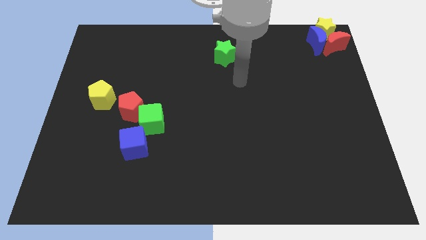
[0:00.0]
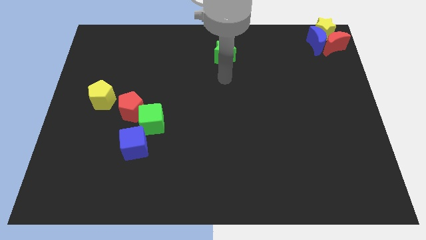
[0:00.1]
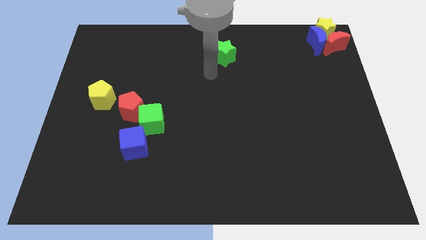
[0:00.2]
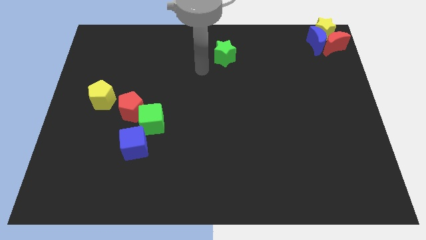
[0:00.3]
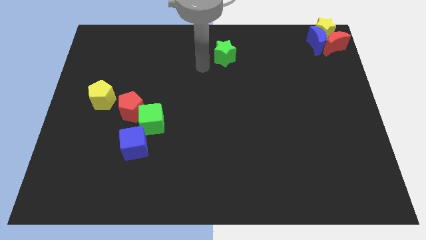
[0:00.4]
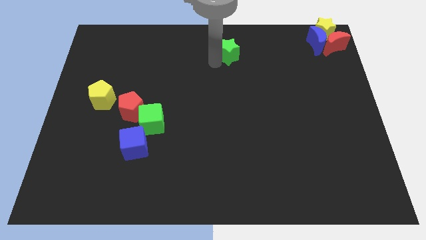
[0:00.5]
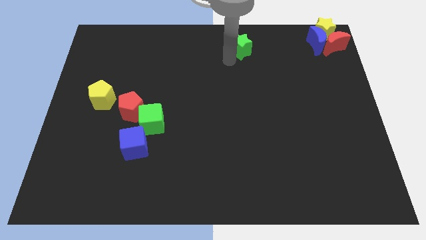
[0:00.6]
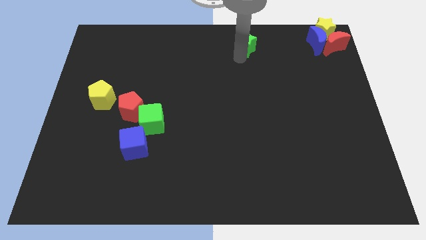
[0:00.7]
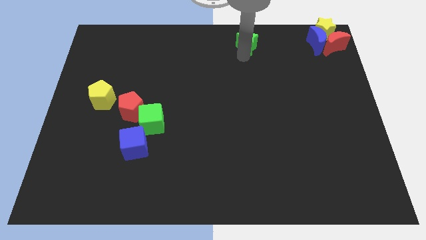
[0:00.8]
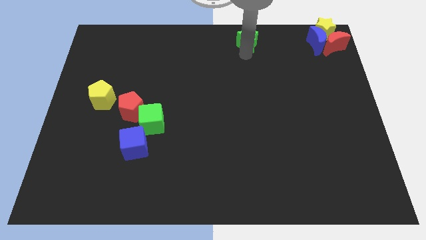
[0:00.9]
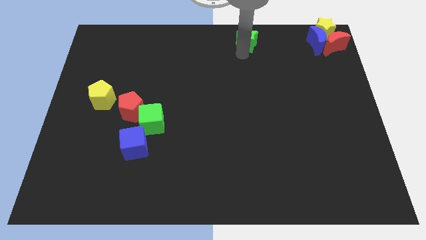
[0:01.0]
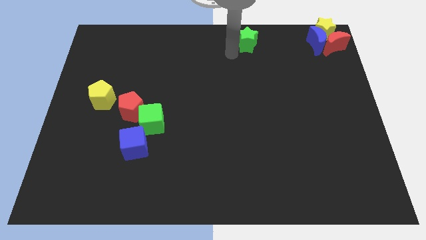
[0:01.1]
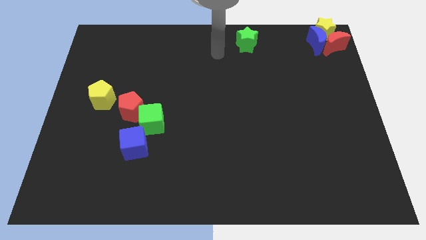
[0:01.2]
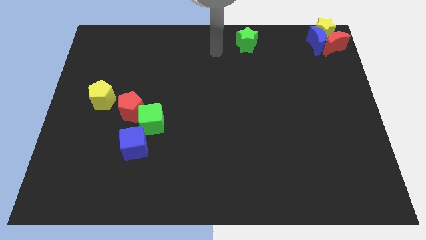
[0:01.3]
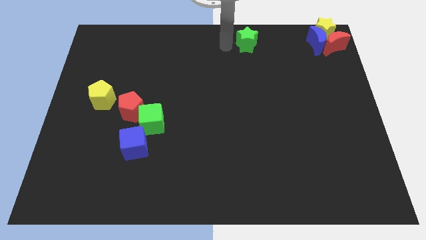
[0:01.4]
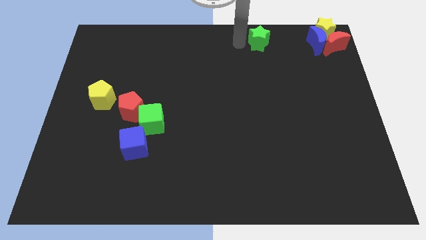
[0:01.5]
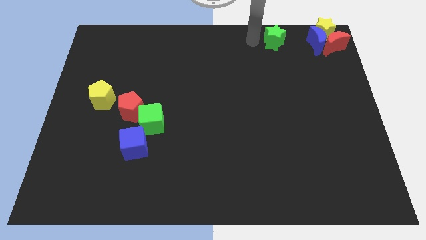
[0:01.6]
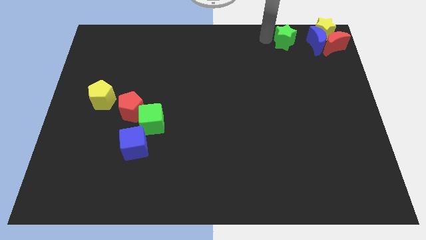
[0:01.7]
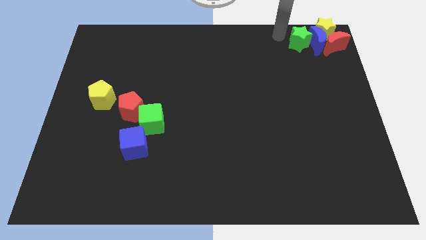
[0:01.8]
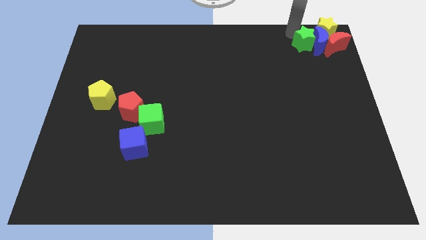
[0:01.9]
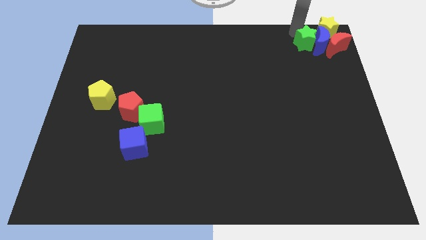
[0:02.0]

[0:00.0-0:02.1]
push the green star into the group of objects

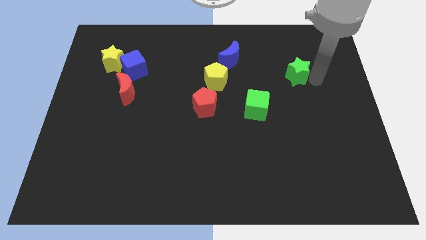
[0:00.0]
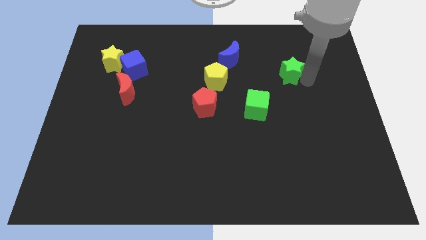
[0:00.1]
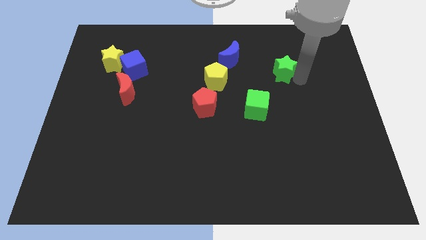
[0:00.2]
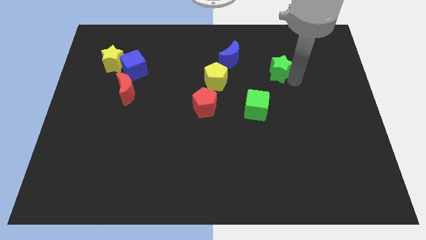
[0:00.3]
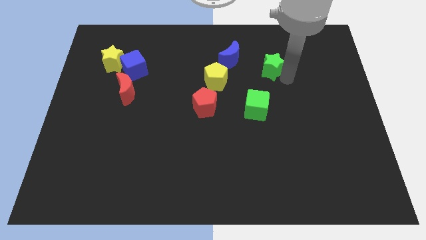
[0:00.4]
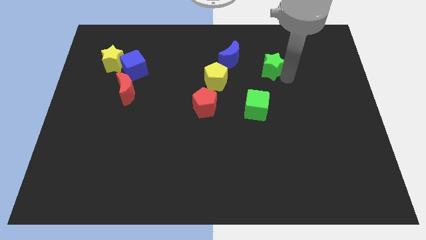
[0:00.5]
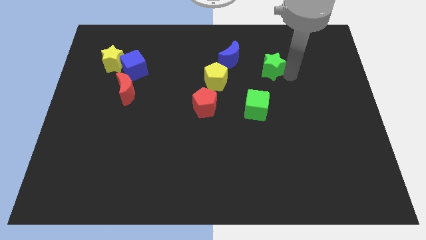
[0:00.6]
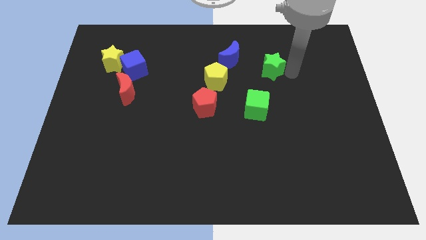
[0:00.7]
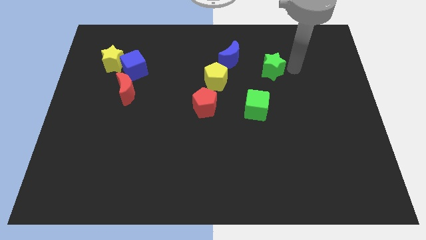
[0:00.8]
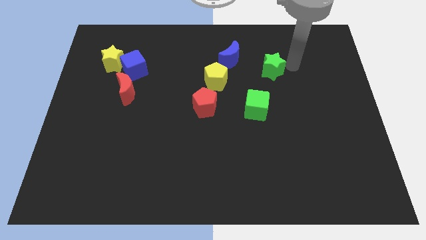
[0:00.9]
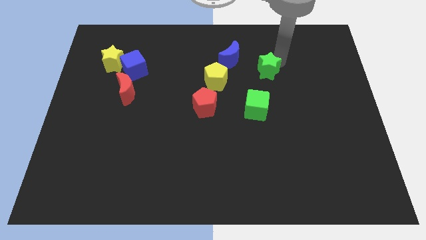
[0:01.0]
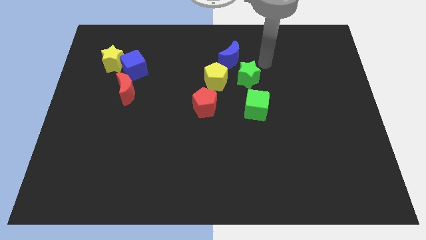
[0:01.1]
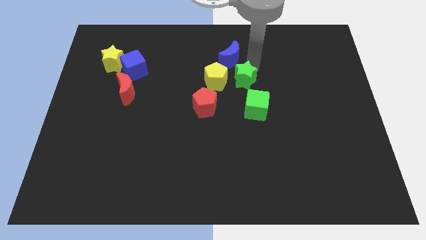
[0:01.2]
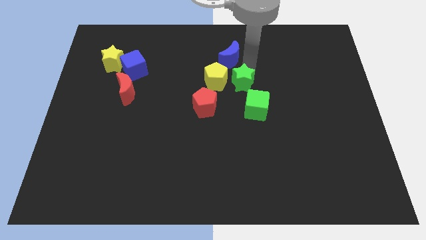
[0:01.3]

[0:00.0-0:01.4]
move the green star right to the yellow pentagon

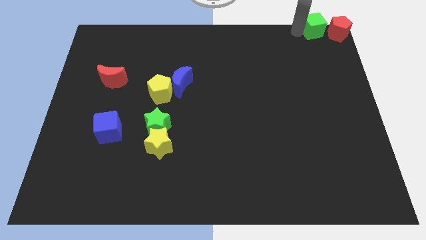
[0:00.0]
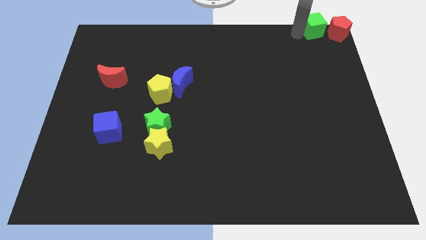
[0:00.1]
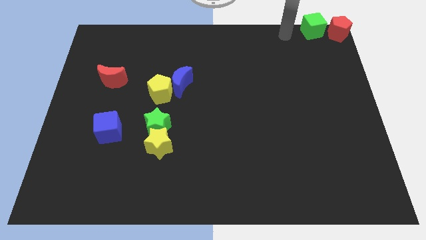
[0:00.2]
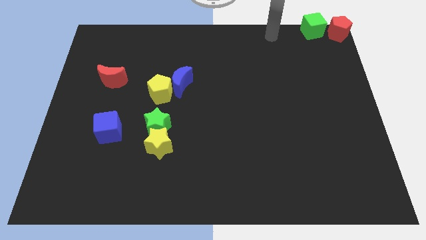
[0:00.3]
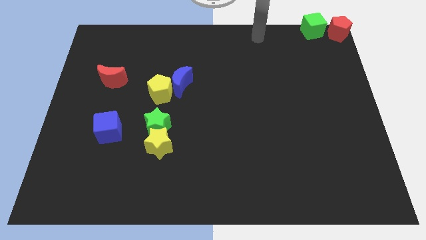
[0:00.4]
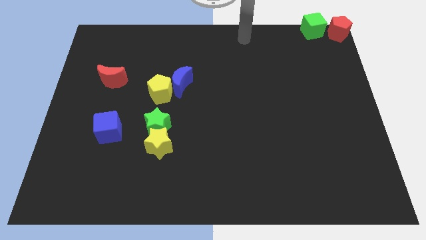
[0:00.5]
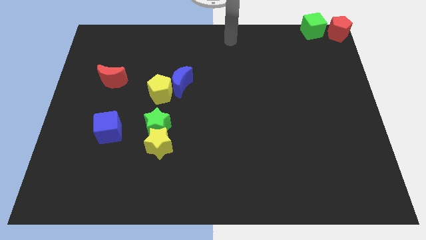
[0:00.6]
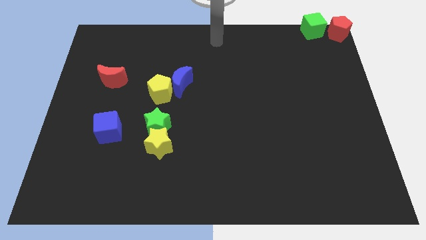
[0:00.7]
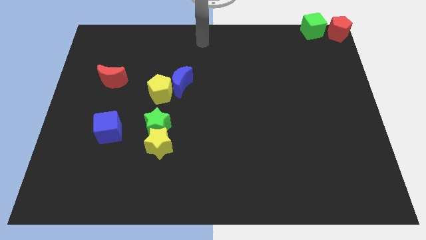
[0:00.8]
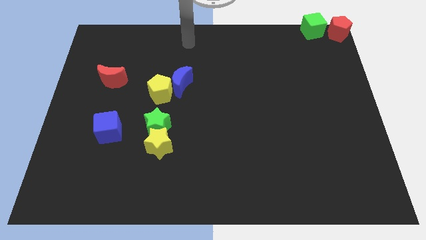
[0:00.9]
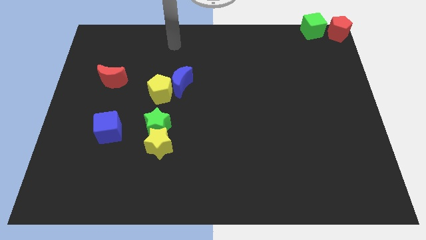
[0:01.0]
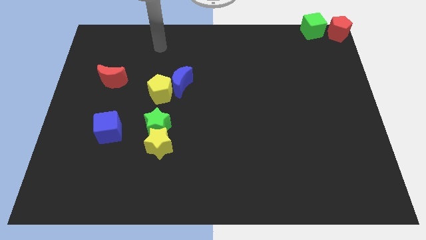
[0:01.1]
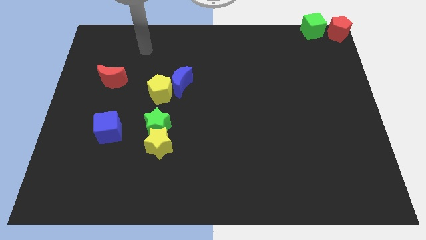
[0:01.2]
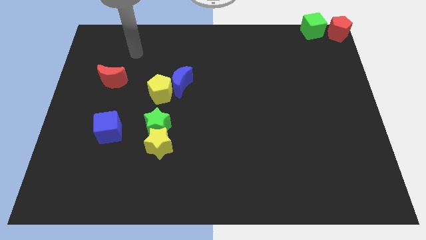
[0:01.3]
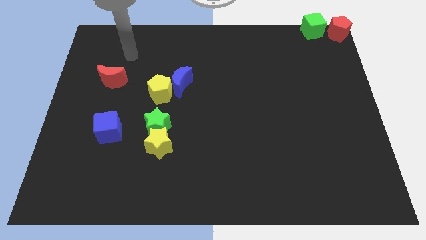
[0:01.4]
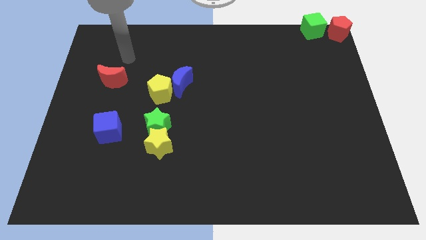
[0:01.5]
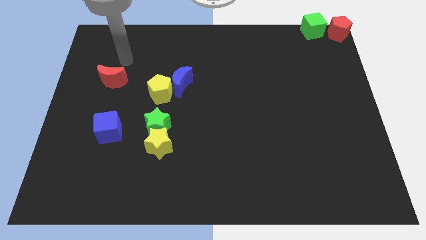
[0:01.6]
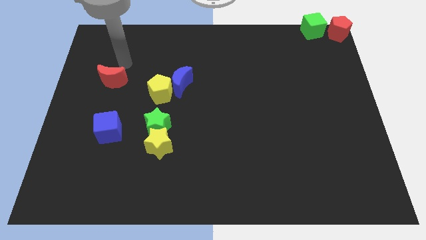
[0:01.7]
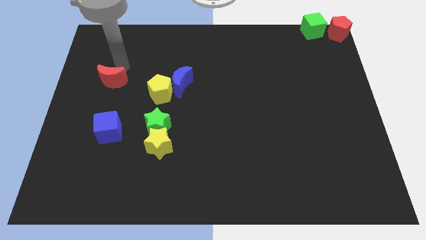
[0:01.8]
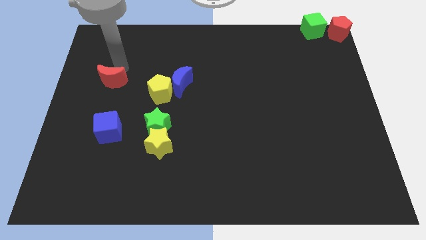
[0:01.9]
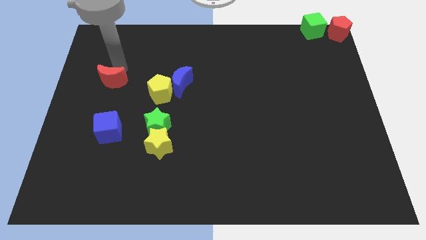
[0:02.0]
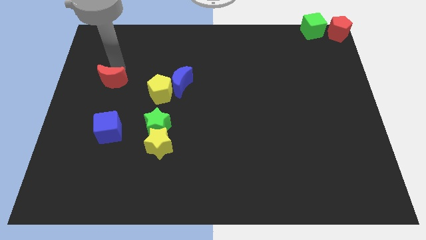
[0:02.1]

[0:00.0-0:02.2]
point your arm above the red crescent

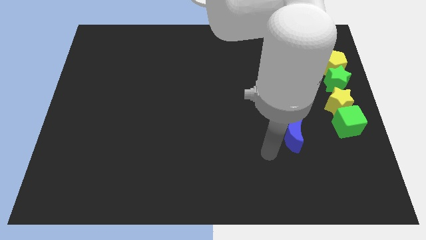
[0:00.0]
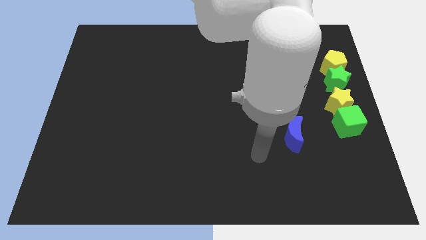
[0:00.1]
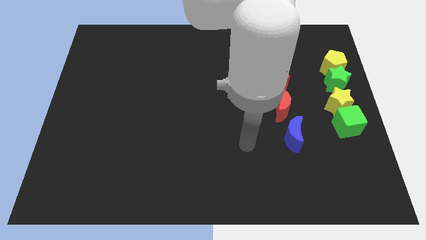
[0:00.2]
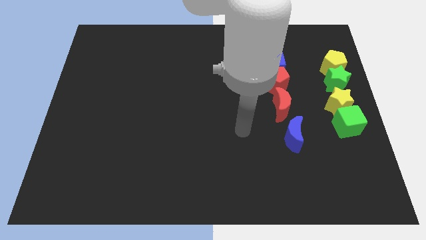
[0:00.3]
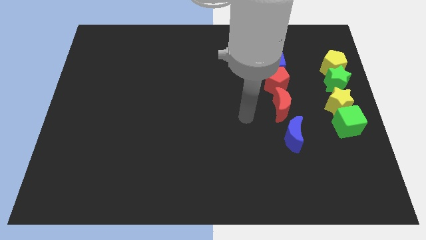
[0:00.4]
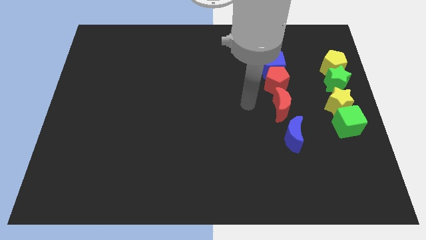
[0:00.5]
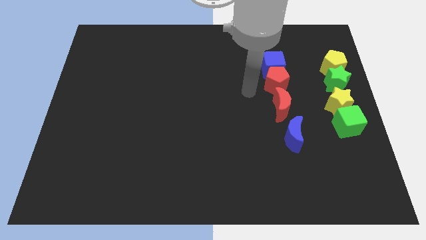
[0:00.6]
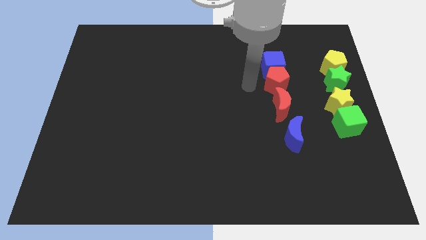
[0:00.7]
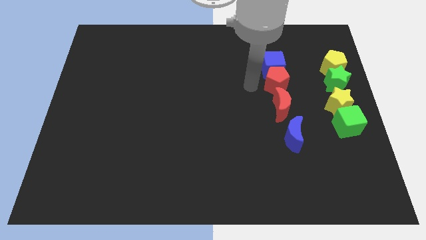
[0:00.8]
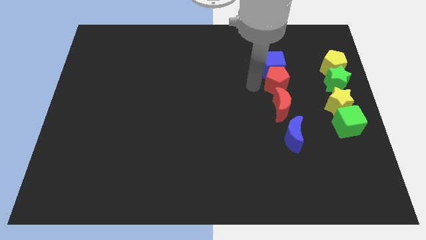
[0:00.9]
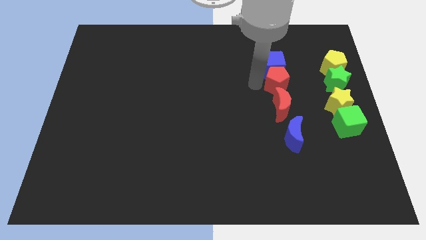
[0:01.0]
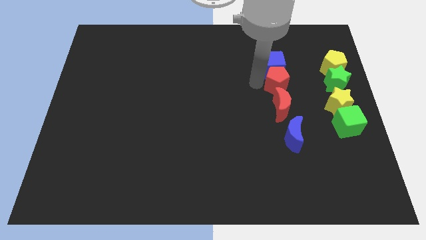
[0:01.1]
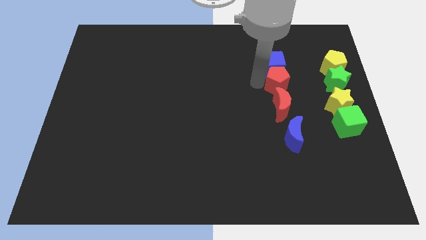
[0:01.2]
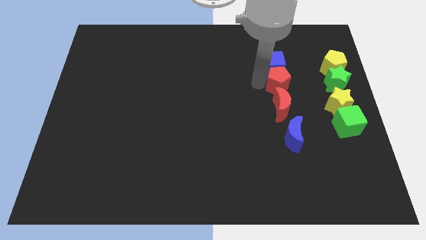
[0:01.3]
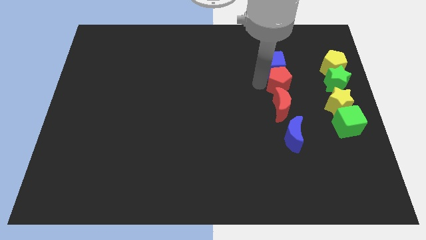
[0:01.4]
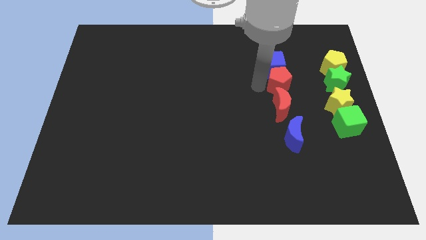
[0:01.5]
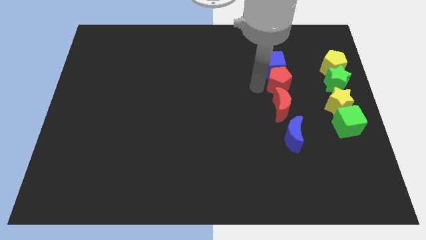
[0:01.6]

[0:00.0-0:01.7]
touch the left side of the red pentagon

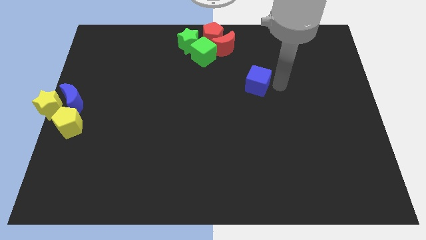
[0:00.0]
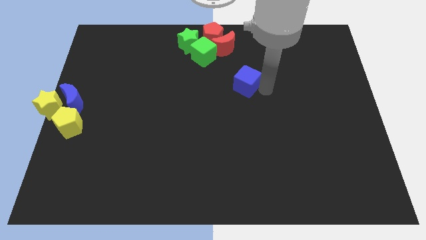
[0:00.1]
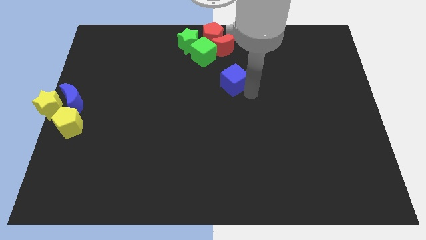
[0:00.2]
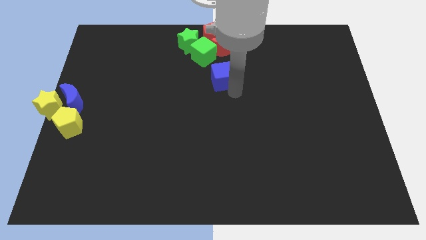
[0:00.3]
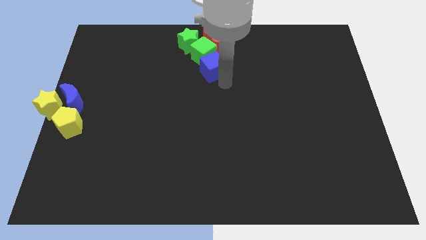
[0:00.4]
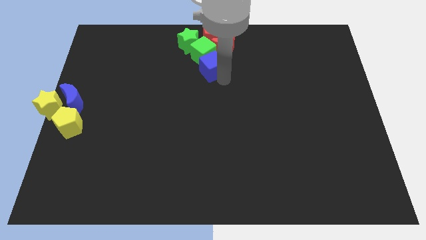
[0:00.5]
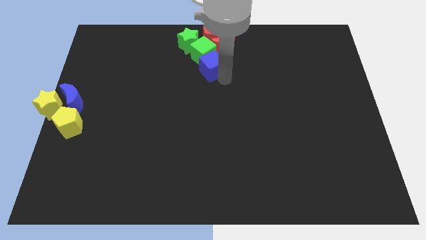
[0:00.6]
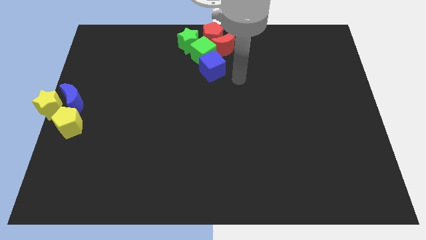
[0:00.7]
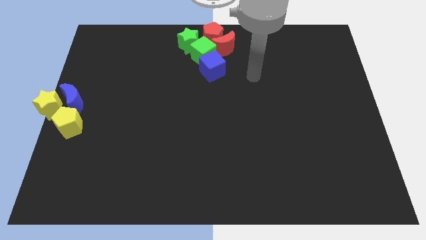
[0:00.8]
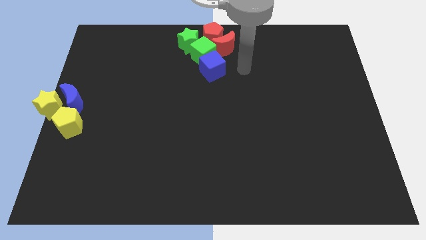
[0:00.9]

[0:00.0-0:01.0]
push the blue cube towards the group of blocks

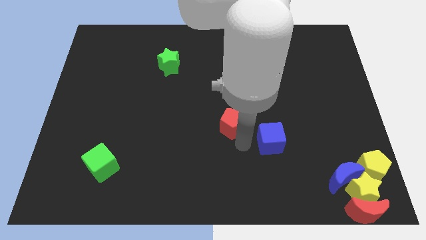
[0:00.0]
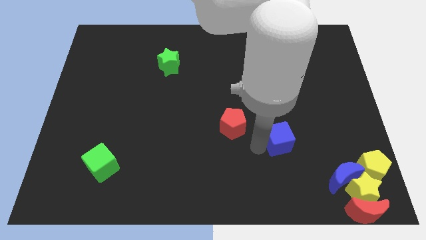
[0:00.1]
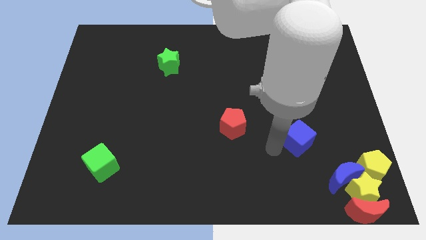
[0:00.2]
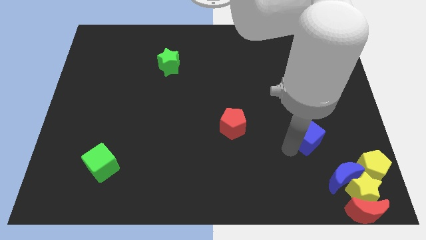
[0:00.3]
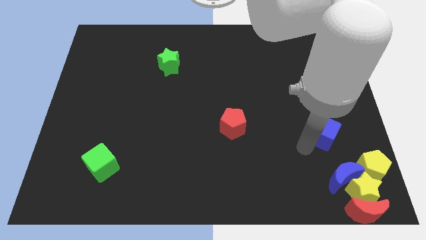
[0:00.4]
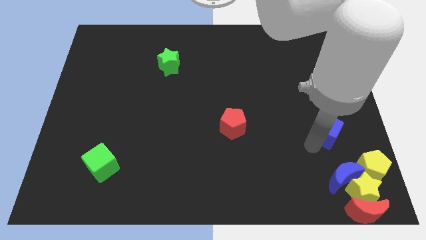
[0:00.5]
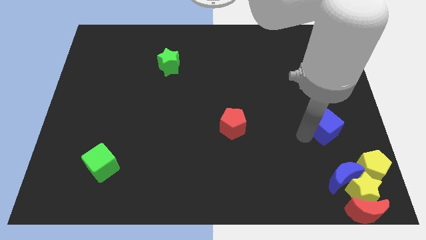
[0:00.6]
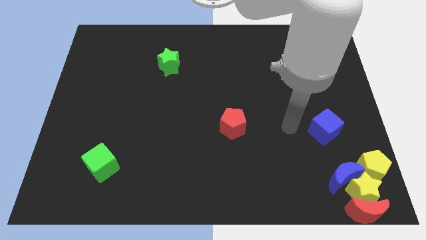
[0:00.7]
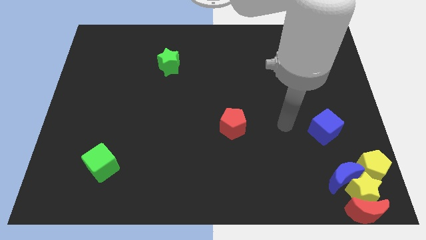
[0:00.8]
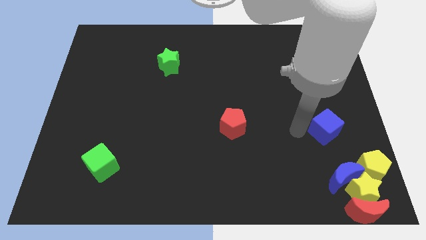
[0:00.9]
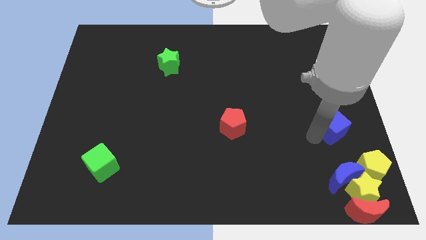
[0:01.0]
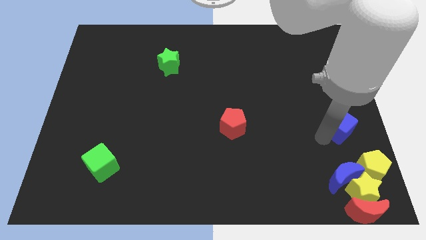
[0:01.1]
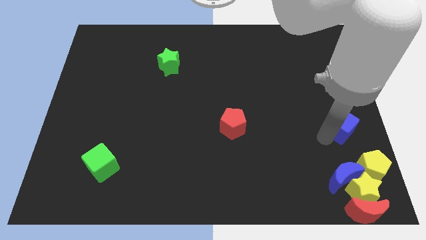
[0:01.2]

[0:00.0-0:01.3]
move the blue cube to the right center
